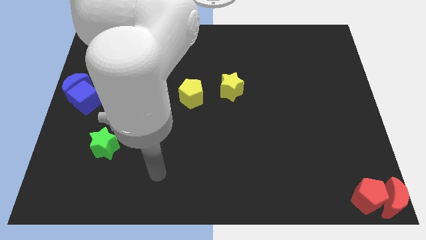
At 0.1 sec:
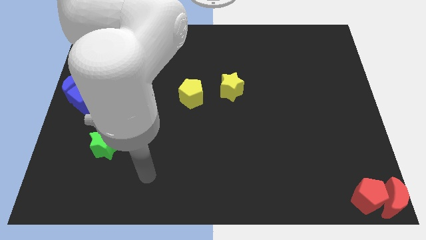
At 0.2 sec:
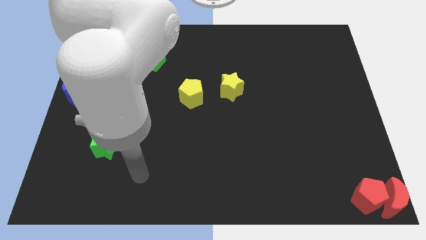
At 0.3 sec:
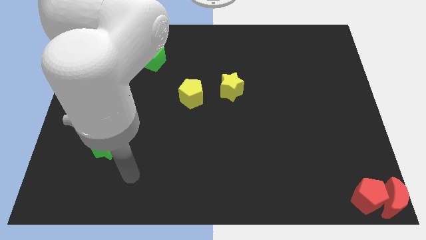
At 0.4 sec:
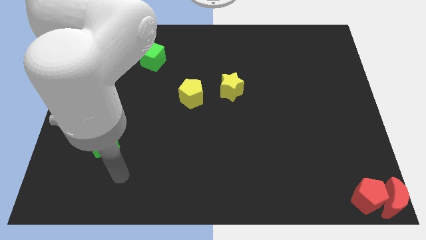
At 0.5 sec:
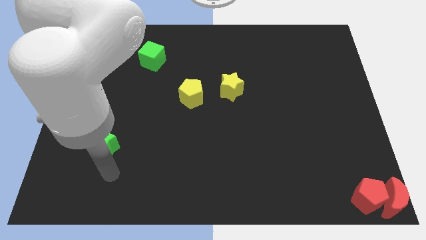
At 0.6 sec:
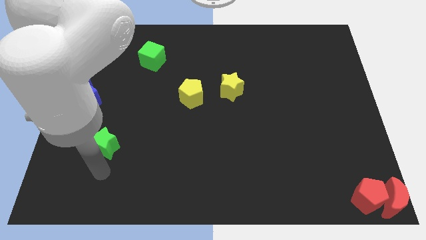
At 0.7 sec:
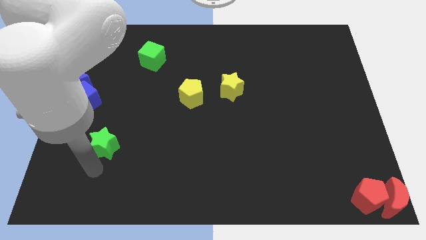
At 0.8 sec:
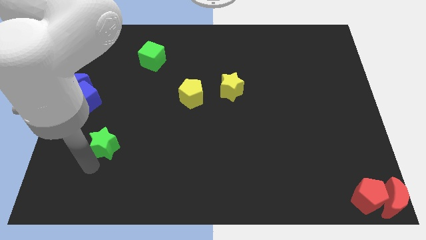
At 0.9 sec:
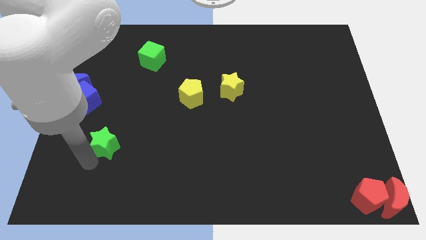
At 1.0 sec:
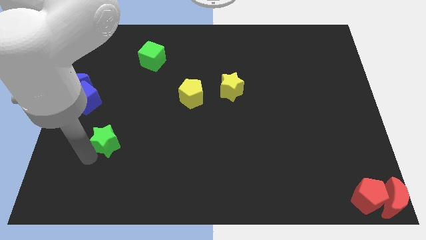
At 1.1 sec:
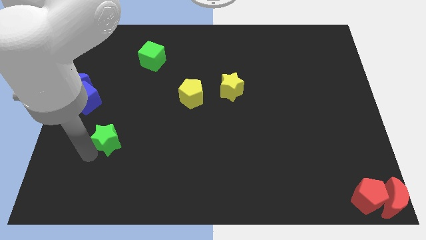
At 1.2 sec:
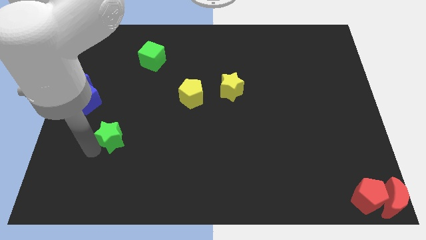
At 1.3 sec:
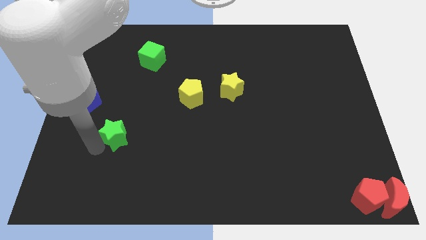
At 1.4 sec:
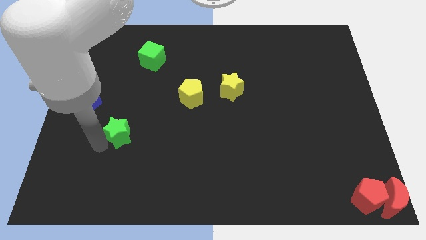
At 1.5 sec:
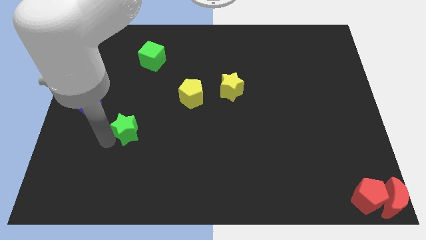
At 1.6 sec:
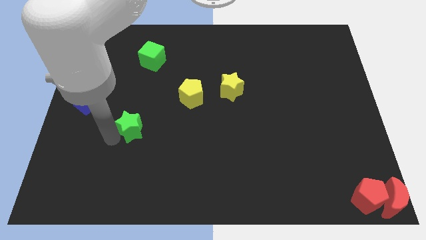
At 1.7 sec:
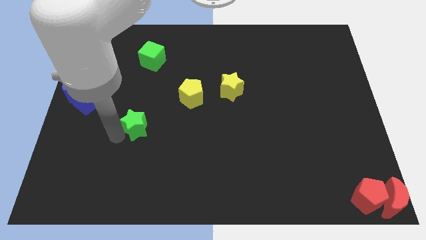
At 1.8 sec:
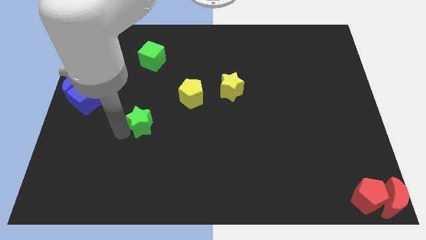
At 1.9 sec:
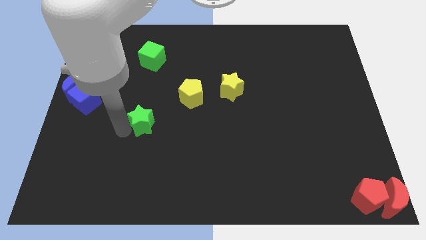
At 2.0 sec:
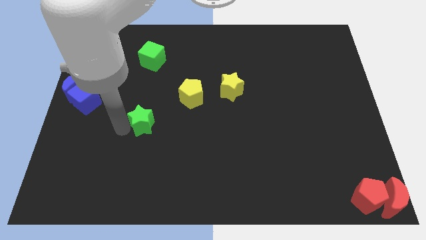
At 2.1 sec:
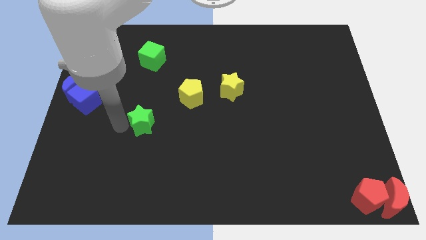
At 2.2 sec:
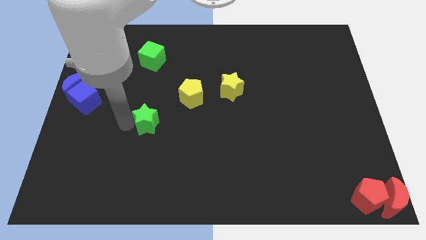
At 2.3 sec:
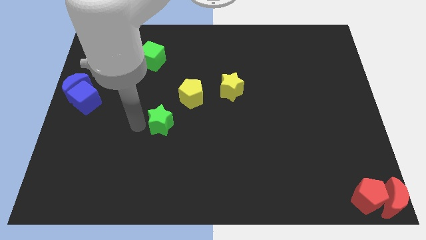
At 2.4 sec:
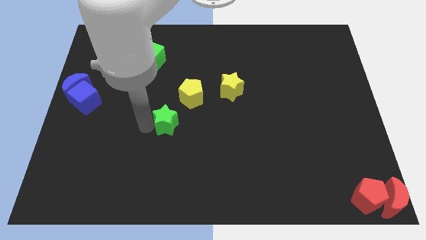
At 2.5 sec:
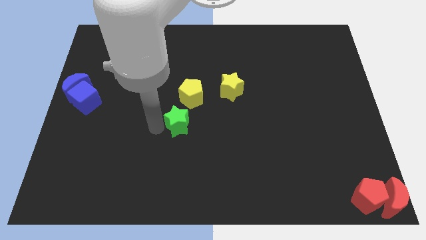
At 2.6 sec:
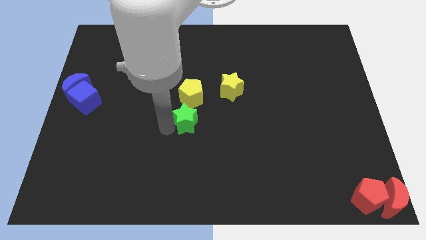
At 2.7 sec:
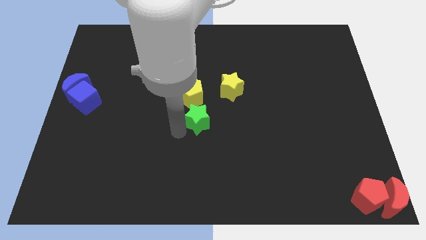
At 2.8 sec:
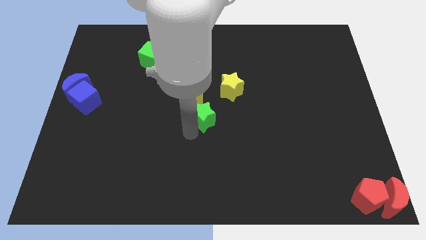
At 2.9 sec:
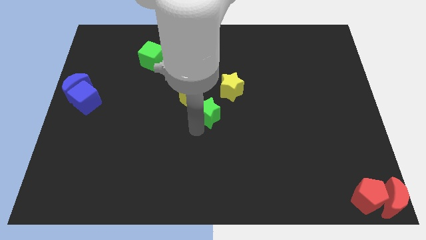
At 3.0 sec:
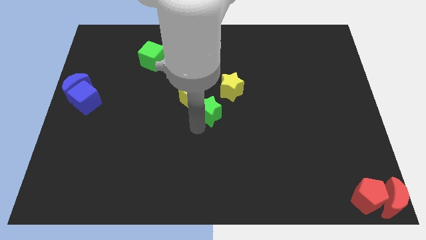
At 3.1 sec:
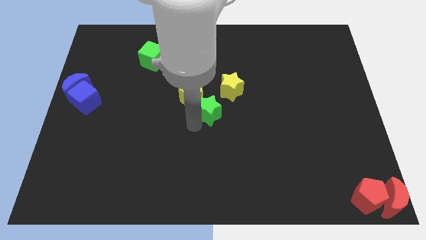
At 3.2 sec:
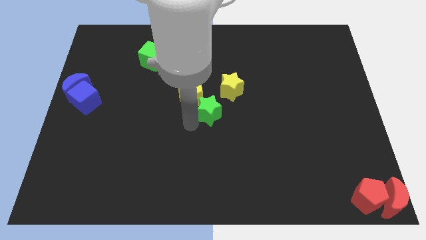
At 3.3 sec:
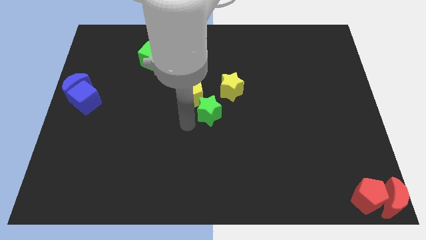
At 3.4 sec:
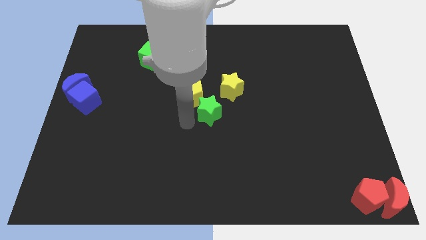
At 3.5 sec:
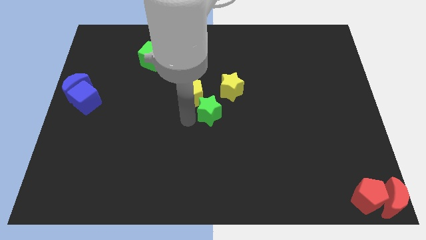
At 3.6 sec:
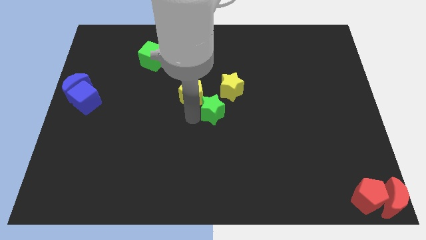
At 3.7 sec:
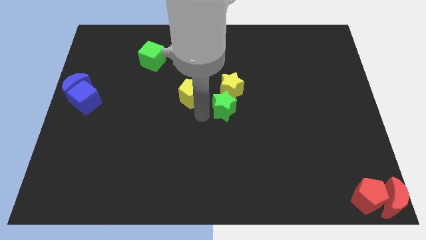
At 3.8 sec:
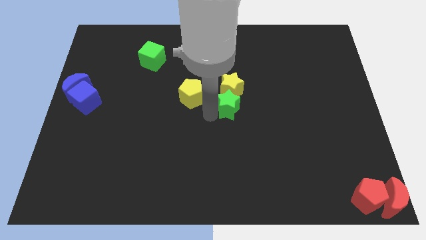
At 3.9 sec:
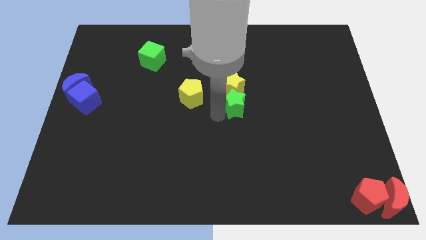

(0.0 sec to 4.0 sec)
place the green star vertically below the yellow star

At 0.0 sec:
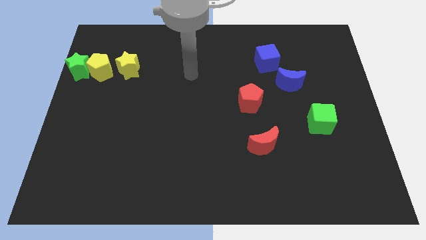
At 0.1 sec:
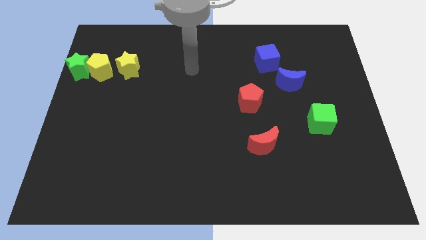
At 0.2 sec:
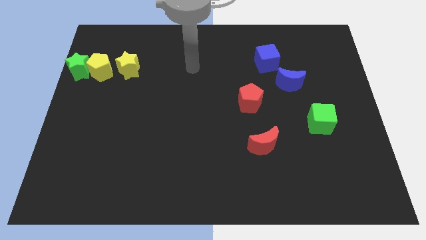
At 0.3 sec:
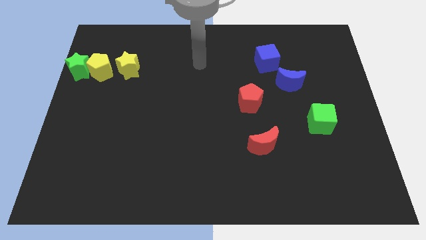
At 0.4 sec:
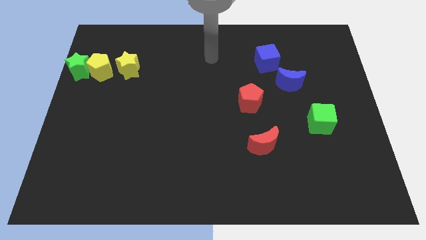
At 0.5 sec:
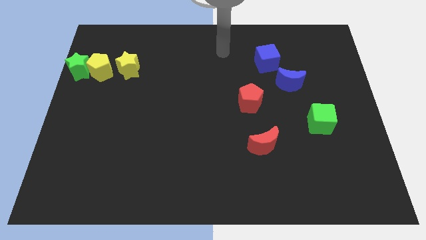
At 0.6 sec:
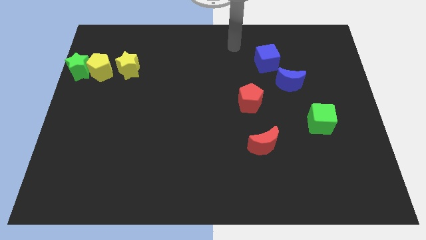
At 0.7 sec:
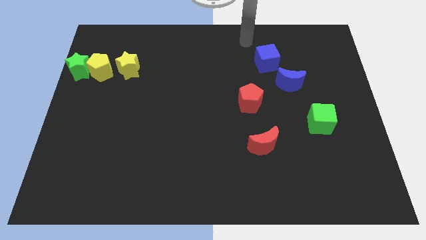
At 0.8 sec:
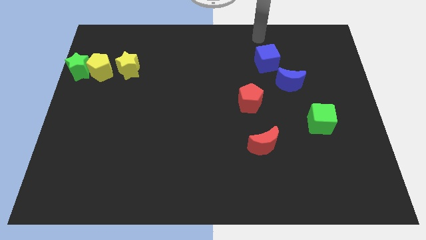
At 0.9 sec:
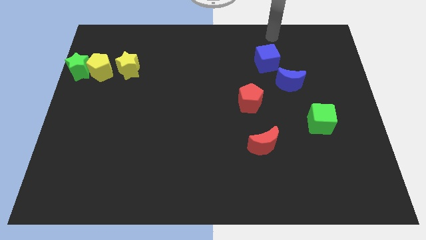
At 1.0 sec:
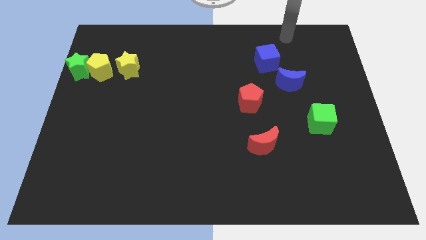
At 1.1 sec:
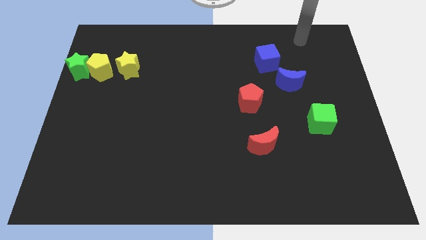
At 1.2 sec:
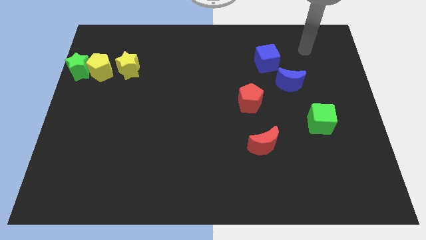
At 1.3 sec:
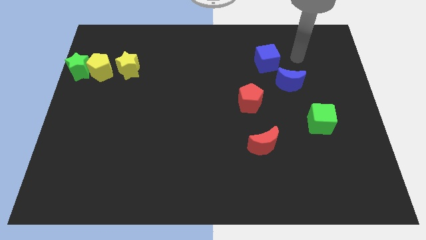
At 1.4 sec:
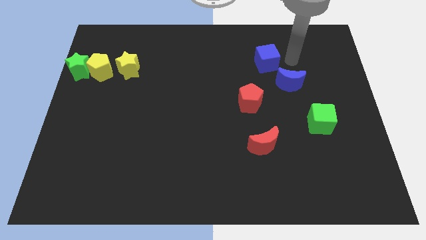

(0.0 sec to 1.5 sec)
move your arm to the right side of the blue cube

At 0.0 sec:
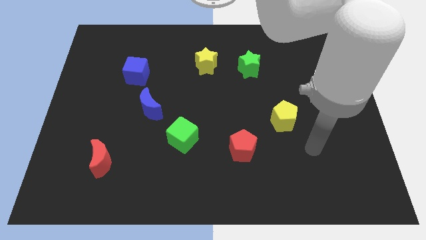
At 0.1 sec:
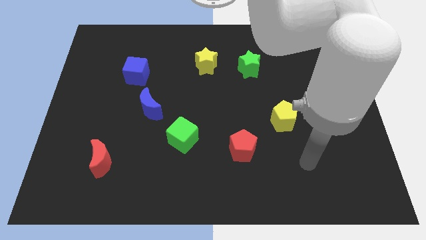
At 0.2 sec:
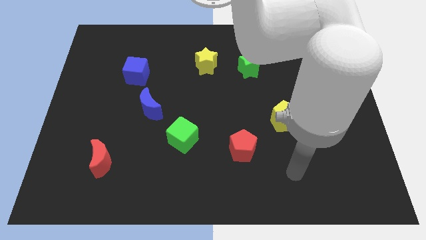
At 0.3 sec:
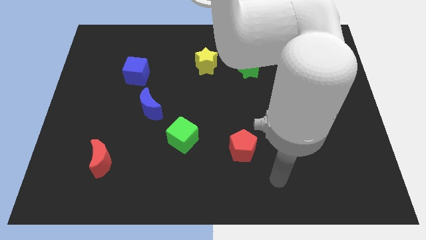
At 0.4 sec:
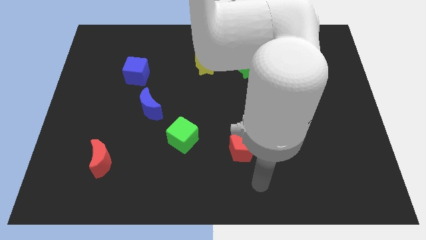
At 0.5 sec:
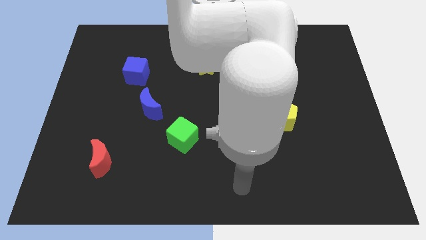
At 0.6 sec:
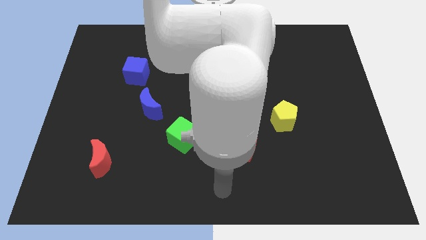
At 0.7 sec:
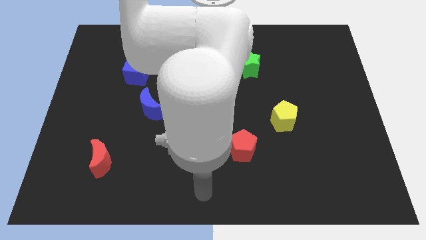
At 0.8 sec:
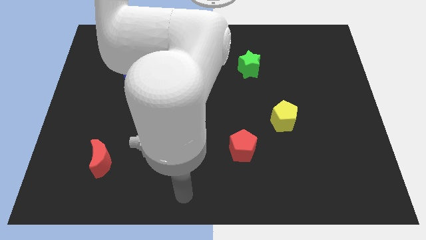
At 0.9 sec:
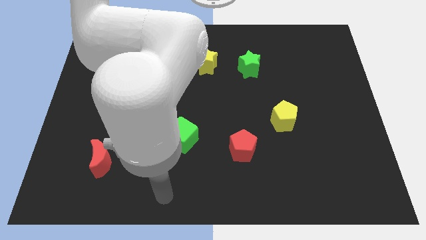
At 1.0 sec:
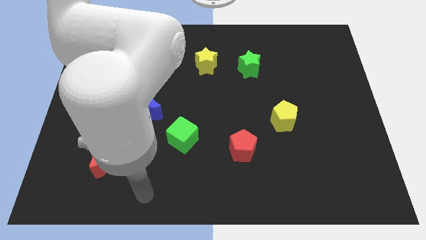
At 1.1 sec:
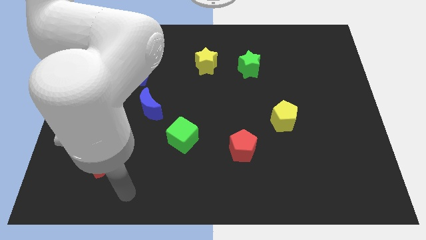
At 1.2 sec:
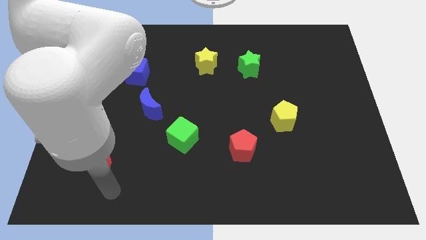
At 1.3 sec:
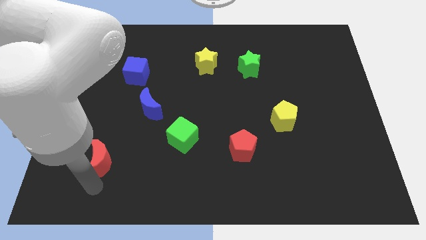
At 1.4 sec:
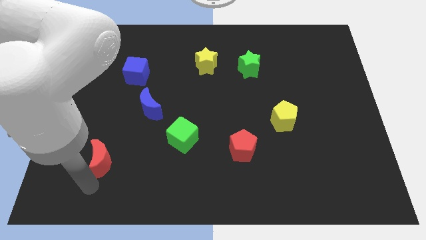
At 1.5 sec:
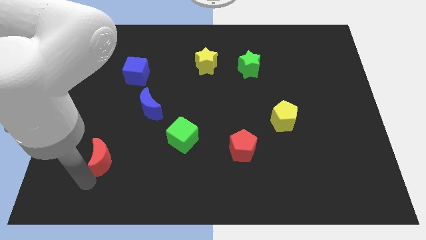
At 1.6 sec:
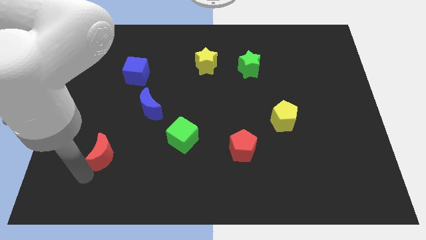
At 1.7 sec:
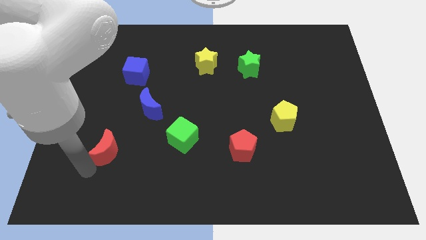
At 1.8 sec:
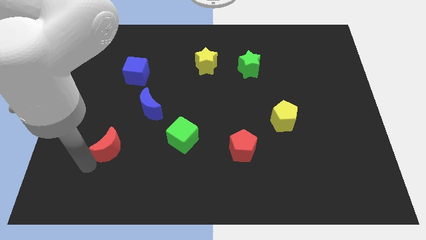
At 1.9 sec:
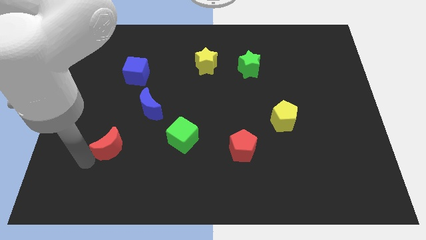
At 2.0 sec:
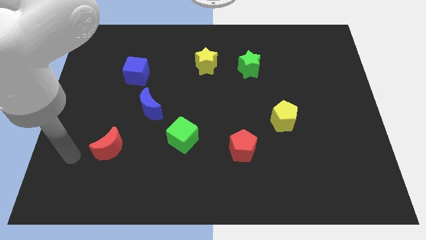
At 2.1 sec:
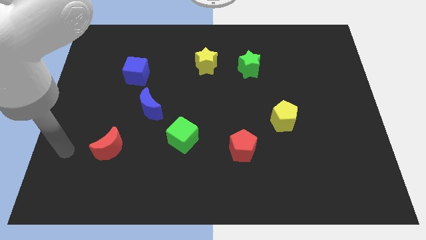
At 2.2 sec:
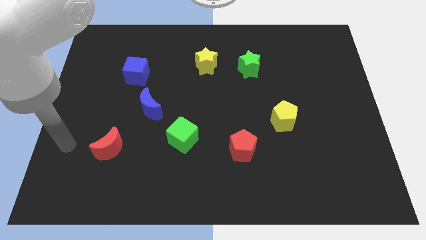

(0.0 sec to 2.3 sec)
move the red moon slightly up

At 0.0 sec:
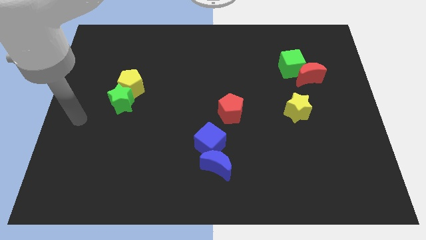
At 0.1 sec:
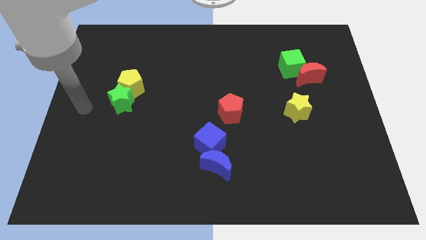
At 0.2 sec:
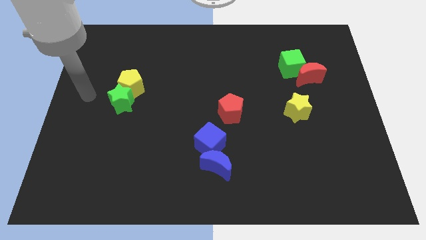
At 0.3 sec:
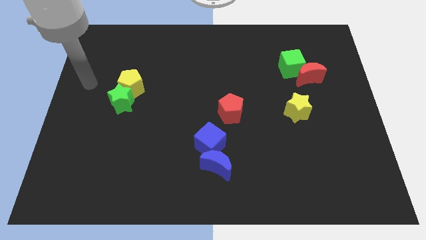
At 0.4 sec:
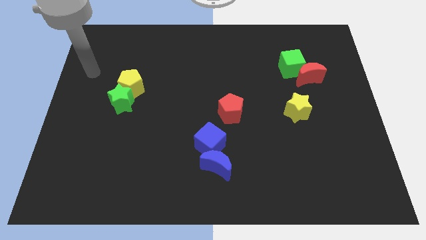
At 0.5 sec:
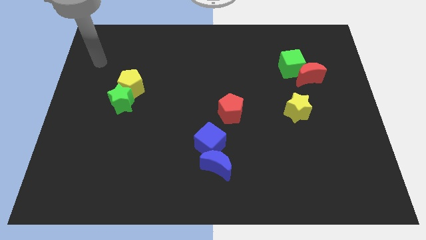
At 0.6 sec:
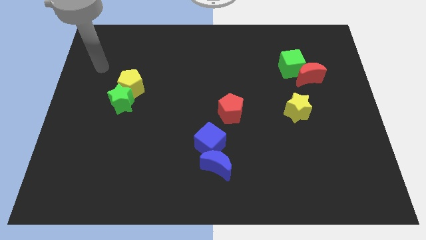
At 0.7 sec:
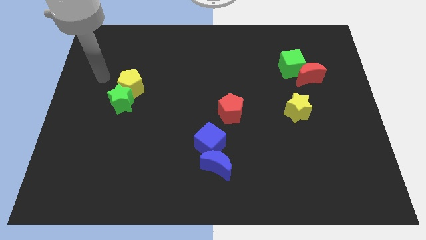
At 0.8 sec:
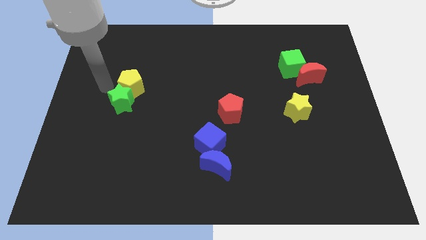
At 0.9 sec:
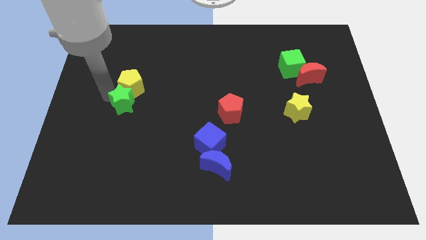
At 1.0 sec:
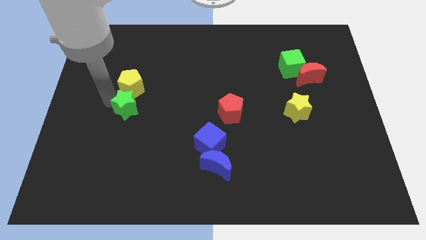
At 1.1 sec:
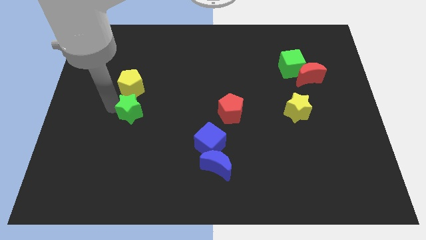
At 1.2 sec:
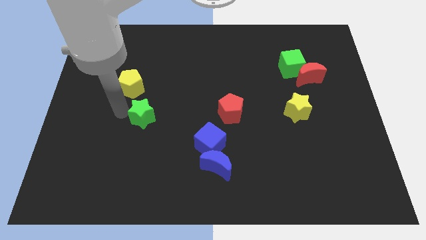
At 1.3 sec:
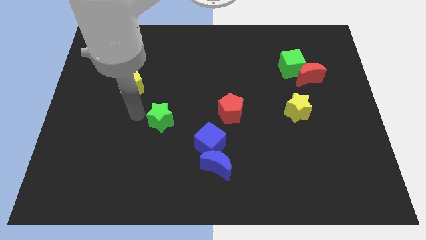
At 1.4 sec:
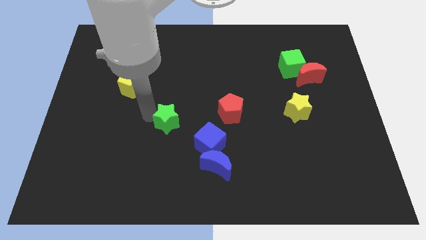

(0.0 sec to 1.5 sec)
separate the green star from the yellow pentagon
